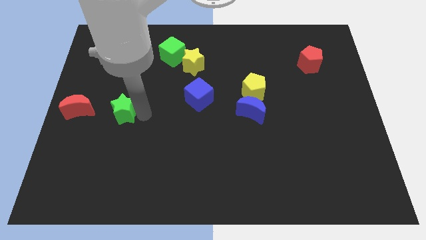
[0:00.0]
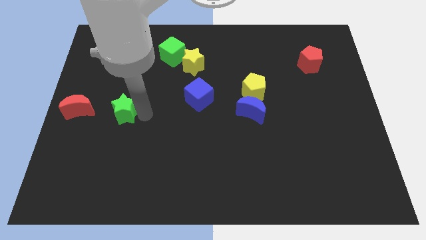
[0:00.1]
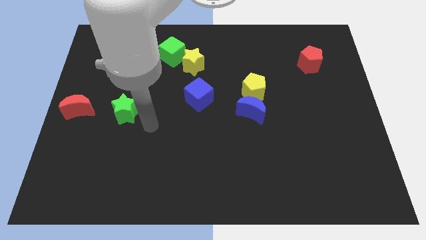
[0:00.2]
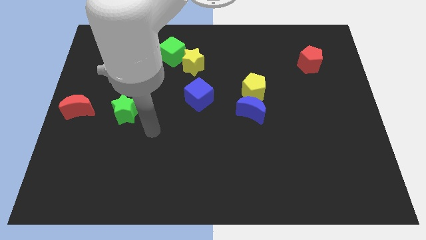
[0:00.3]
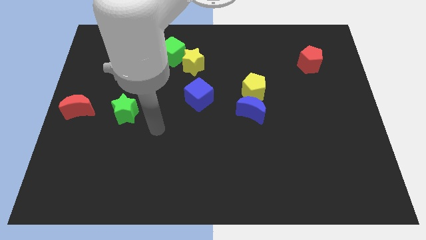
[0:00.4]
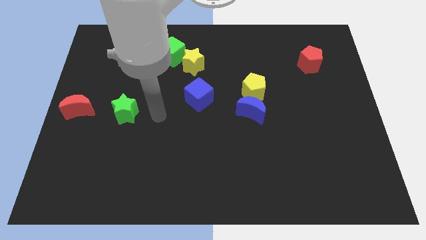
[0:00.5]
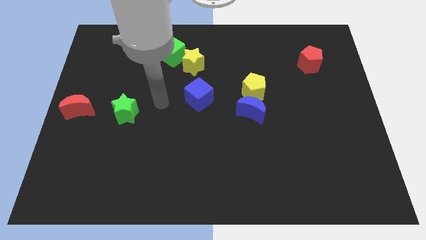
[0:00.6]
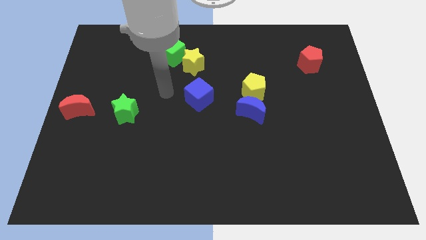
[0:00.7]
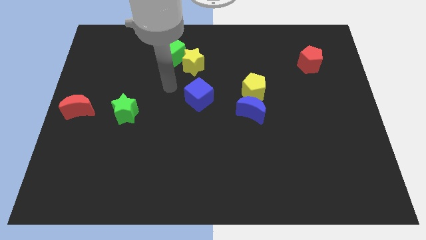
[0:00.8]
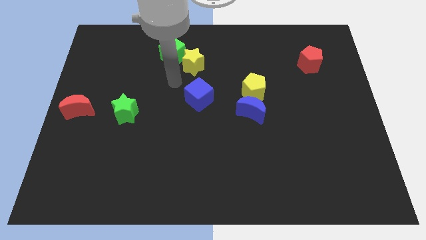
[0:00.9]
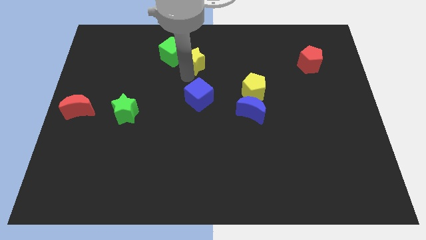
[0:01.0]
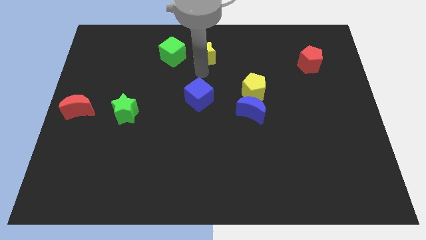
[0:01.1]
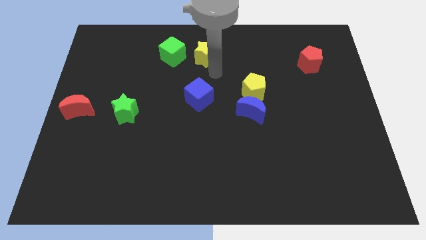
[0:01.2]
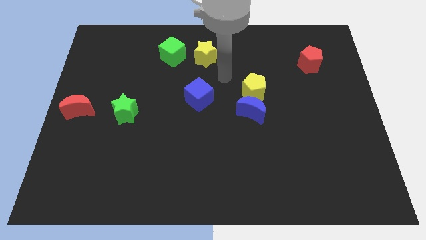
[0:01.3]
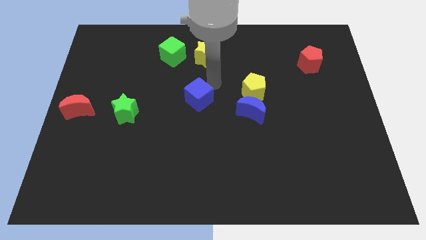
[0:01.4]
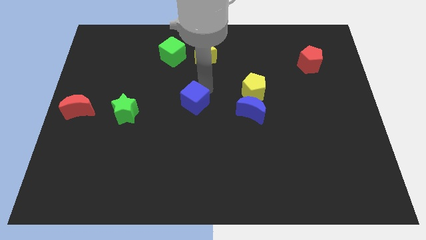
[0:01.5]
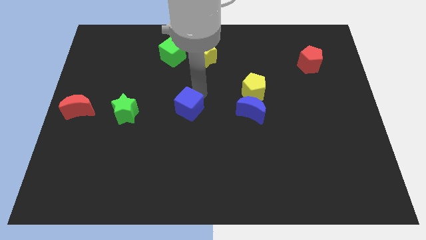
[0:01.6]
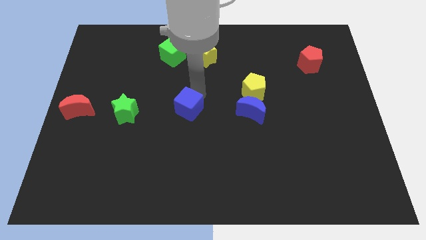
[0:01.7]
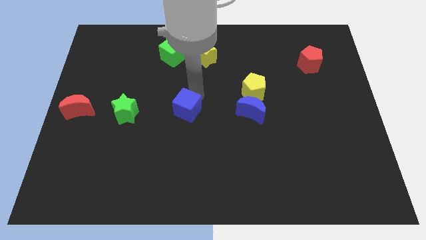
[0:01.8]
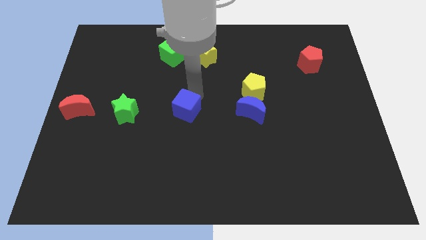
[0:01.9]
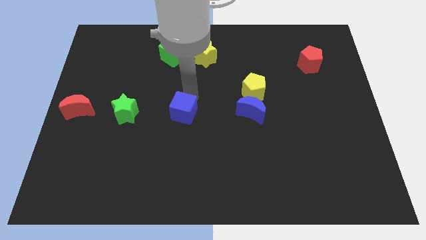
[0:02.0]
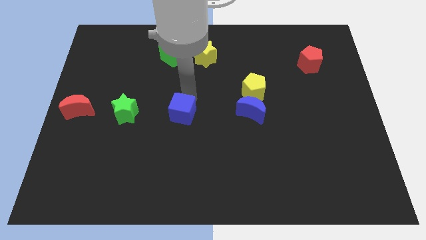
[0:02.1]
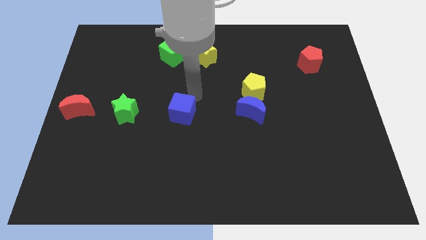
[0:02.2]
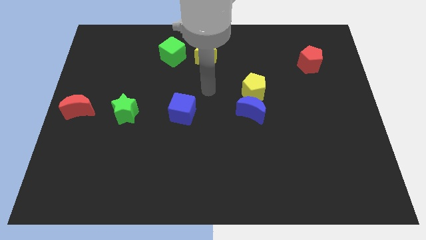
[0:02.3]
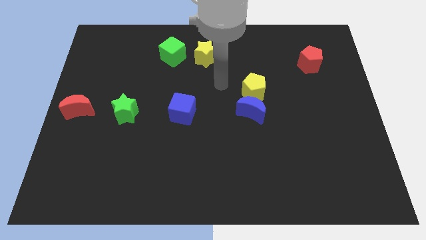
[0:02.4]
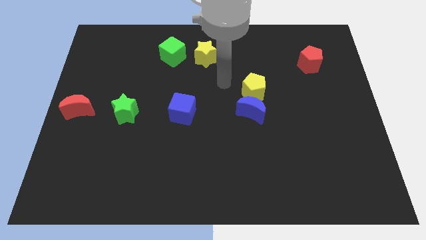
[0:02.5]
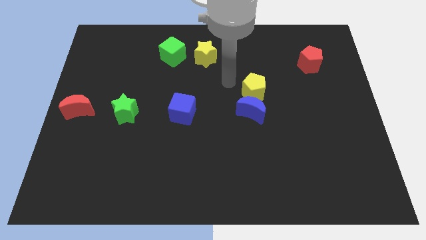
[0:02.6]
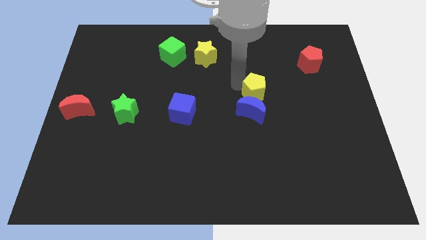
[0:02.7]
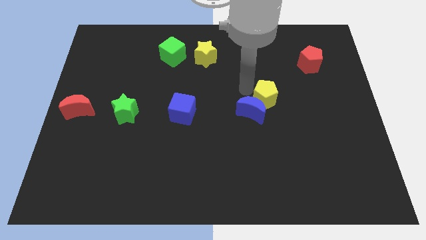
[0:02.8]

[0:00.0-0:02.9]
push the blue moon downward

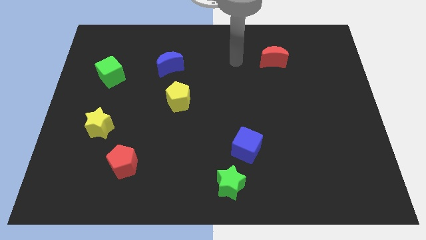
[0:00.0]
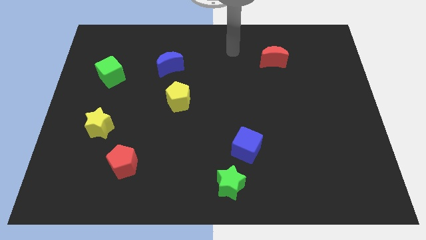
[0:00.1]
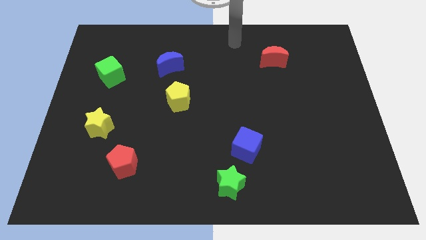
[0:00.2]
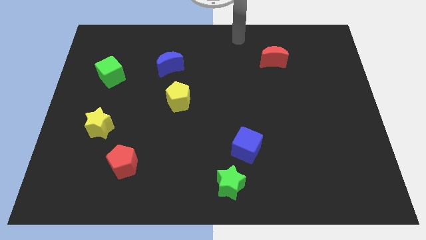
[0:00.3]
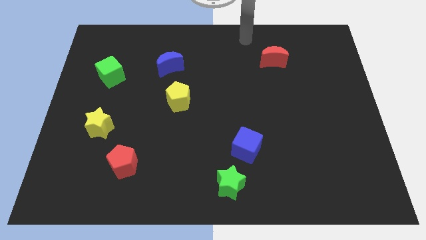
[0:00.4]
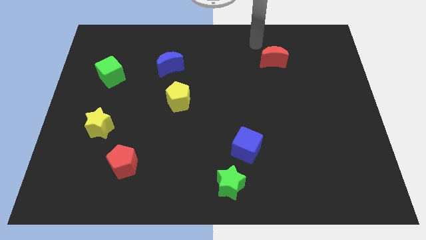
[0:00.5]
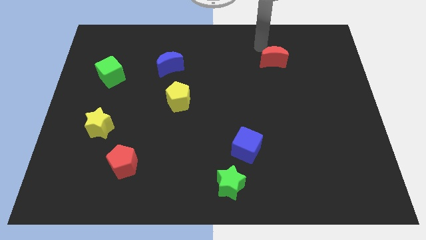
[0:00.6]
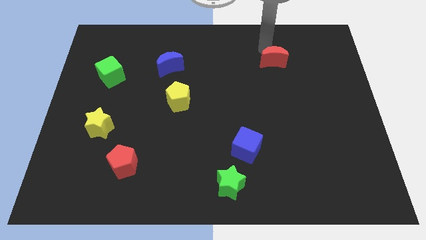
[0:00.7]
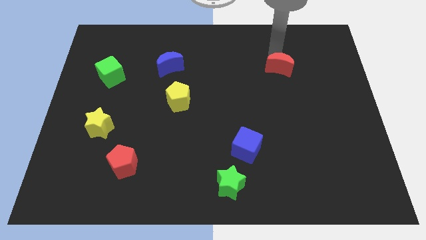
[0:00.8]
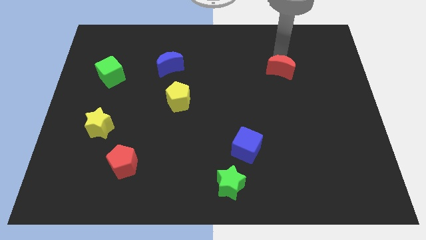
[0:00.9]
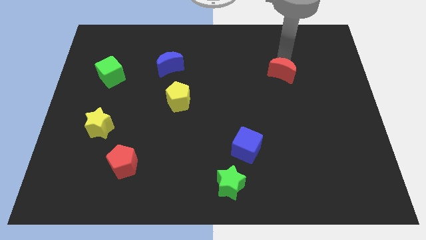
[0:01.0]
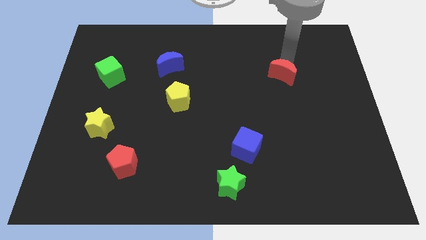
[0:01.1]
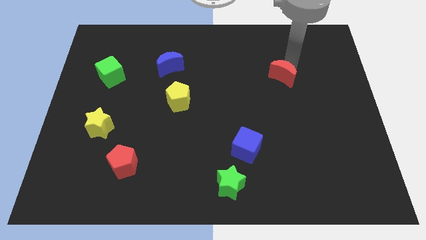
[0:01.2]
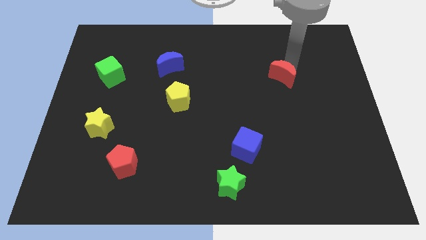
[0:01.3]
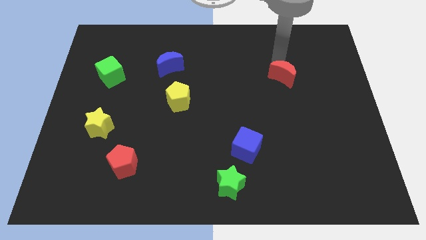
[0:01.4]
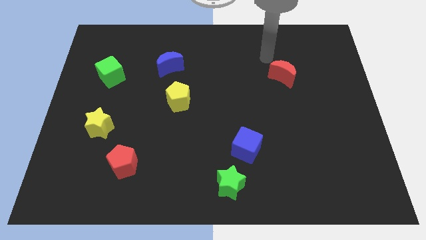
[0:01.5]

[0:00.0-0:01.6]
move the red moon downward

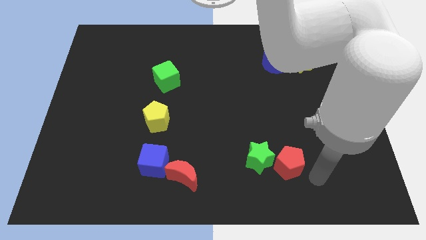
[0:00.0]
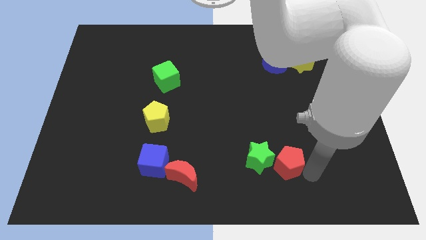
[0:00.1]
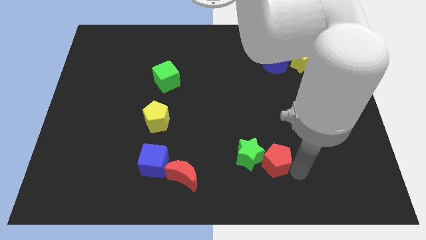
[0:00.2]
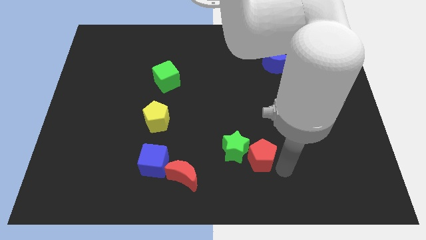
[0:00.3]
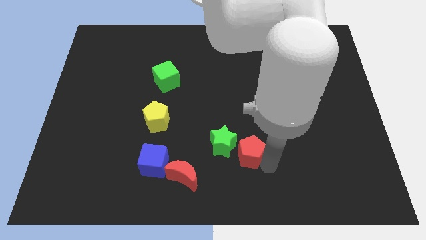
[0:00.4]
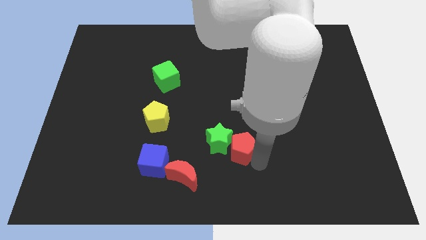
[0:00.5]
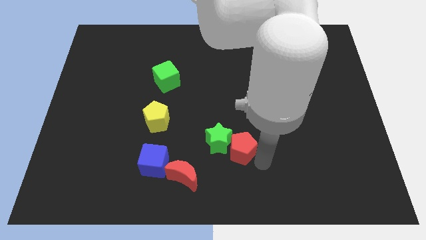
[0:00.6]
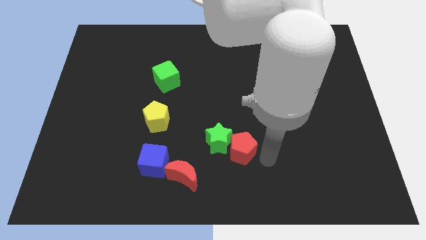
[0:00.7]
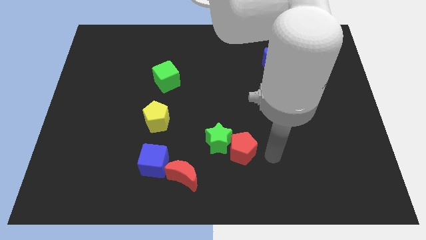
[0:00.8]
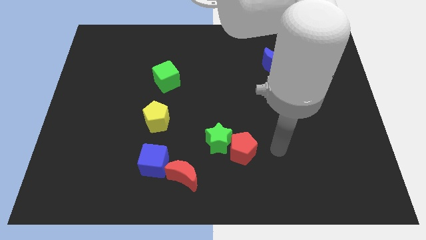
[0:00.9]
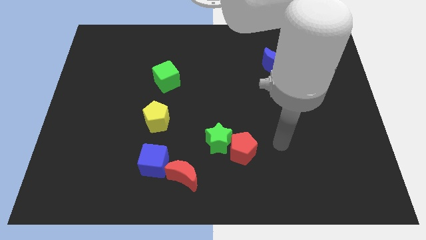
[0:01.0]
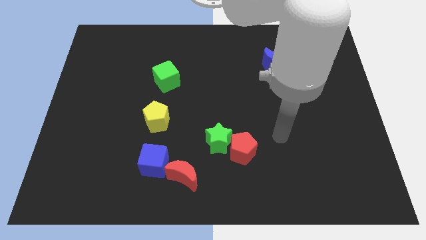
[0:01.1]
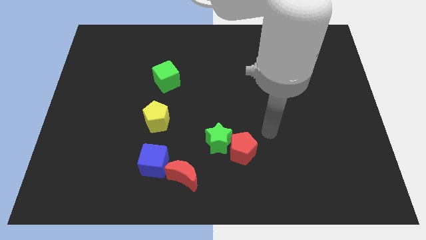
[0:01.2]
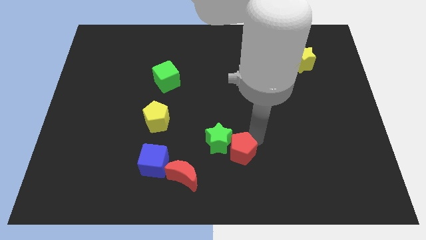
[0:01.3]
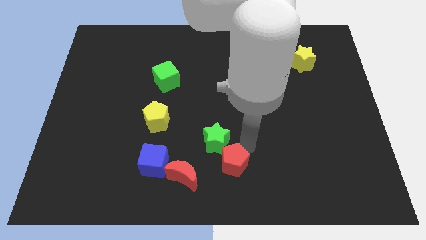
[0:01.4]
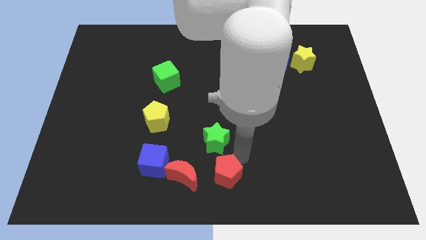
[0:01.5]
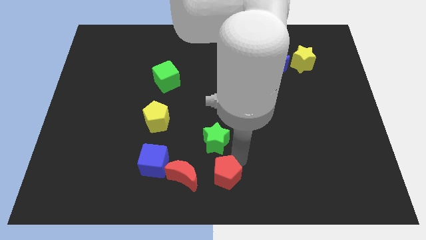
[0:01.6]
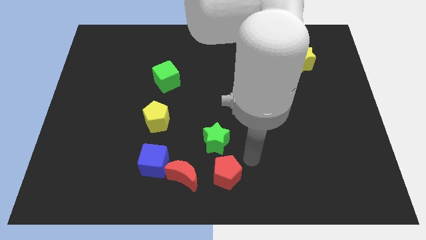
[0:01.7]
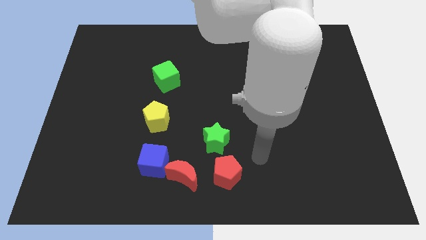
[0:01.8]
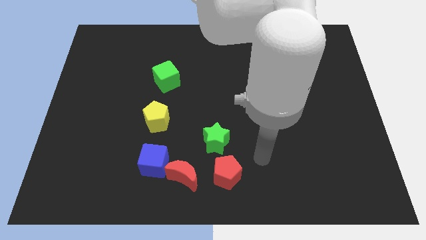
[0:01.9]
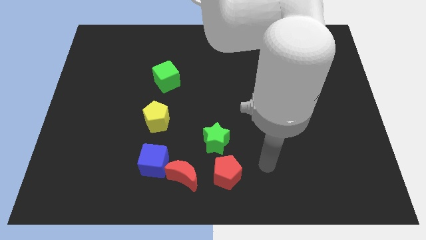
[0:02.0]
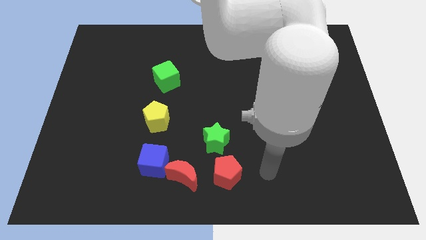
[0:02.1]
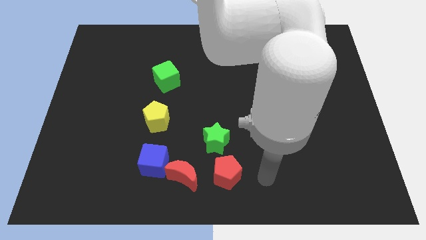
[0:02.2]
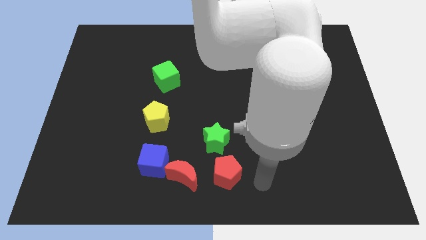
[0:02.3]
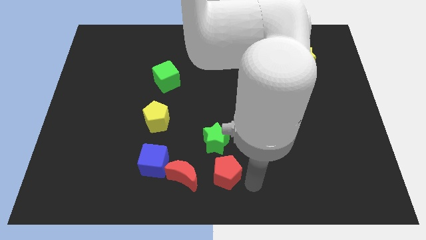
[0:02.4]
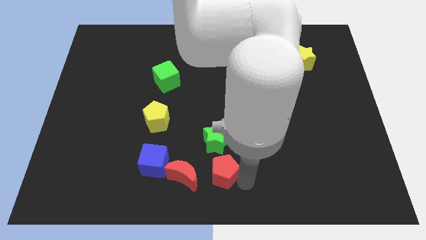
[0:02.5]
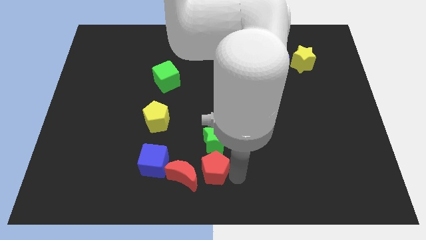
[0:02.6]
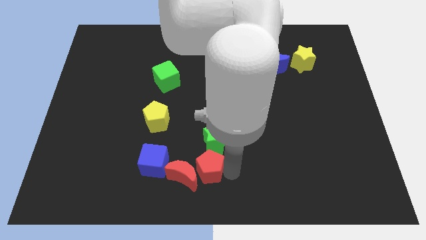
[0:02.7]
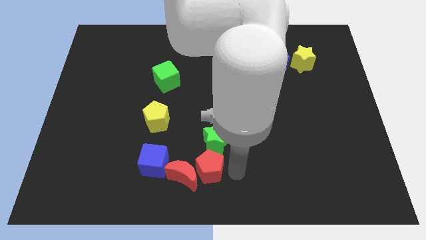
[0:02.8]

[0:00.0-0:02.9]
move the red pentagon right beside the red moon

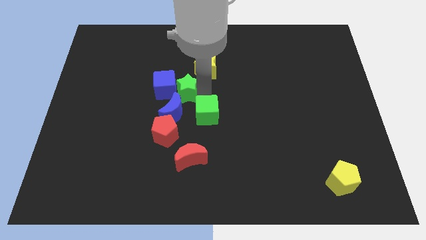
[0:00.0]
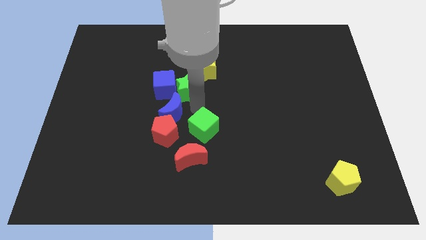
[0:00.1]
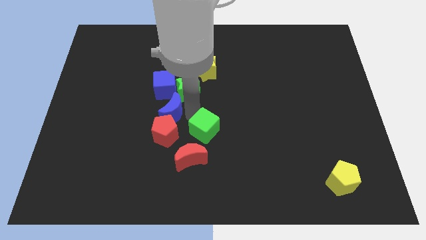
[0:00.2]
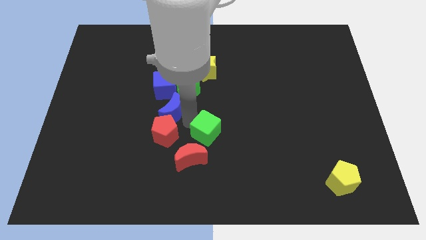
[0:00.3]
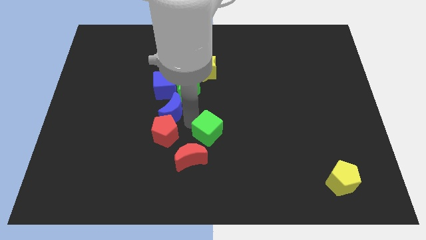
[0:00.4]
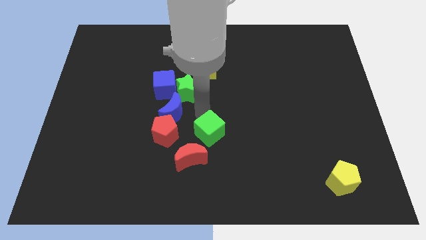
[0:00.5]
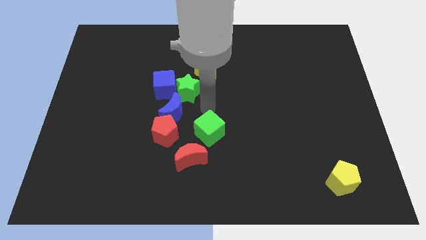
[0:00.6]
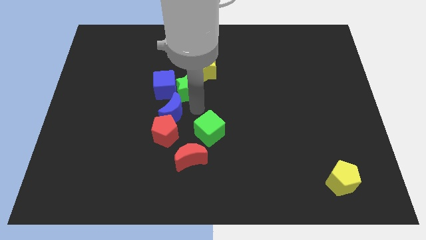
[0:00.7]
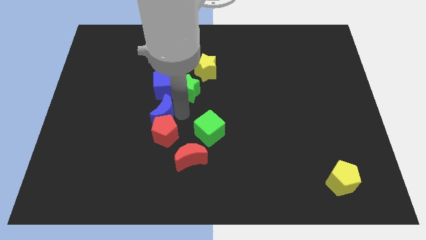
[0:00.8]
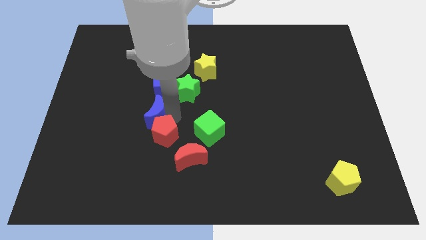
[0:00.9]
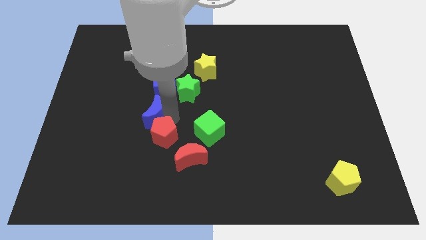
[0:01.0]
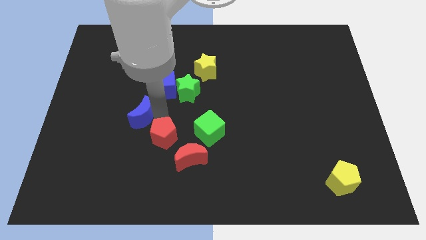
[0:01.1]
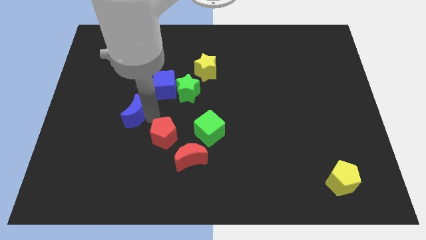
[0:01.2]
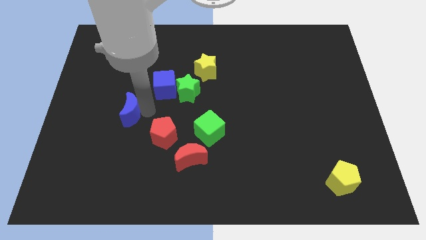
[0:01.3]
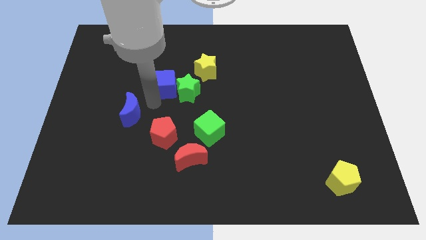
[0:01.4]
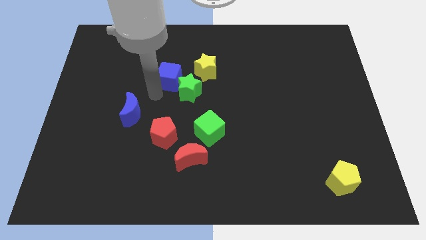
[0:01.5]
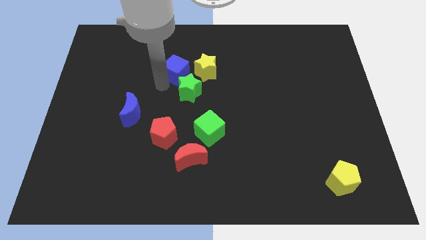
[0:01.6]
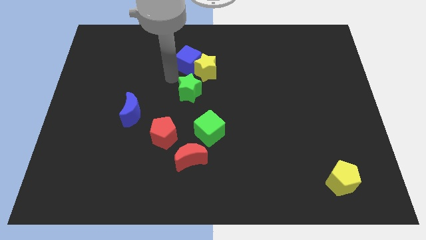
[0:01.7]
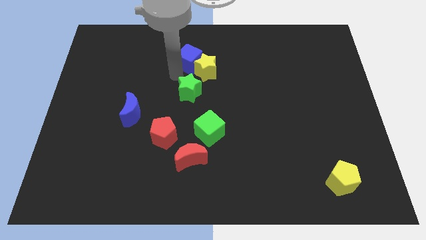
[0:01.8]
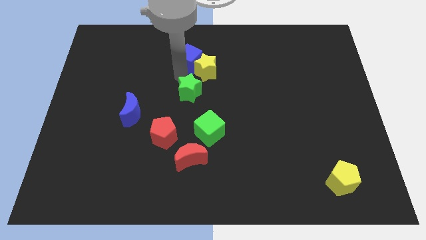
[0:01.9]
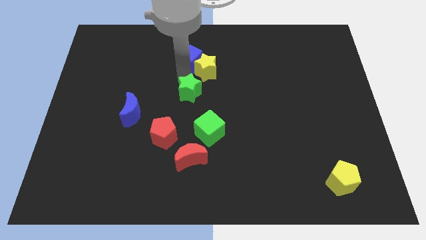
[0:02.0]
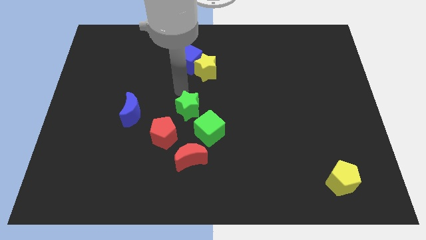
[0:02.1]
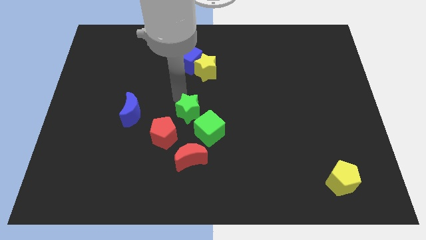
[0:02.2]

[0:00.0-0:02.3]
separate the group of blocks at the center
